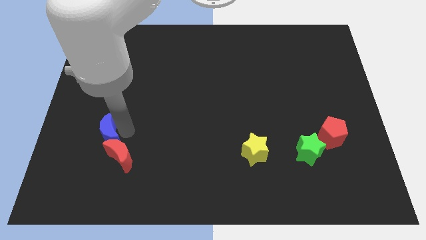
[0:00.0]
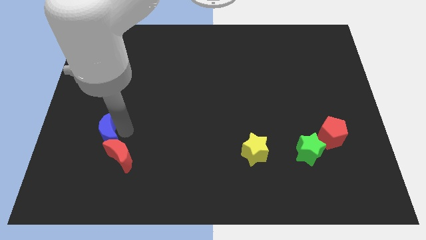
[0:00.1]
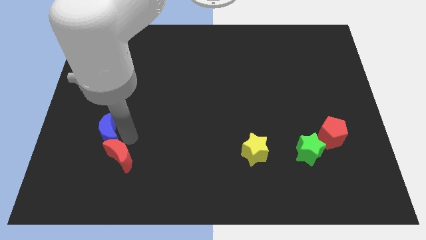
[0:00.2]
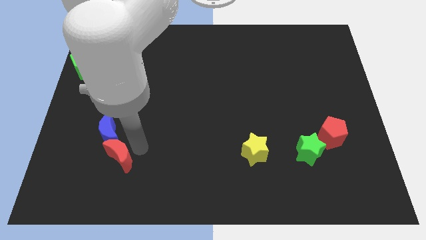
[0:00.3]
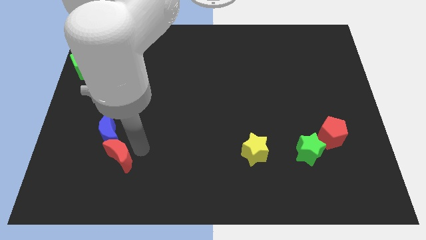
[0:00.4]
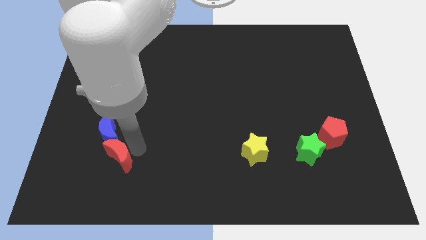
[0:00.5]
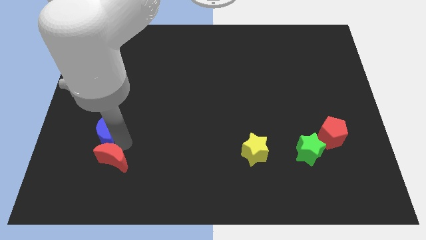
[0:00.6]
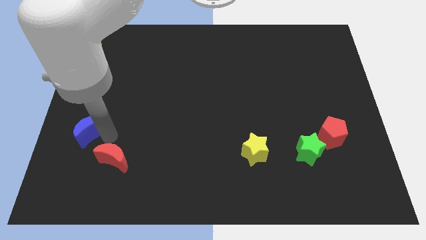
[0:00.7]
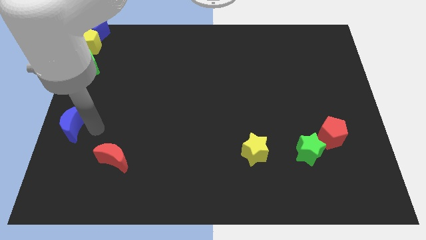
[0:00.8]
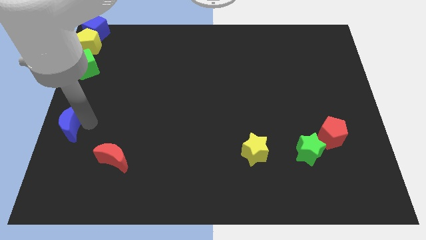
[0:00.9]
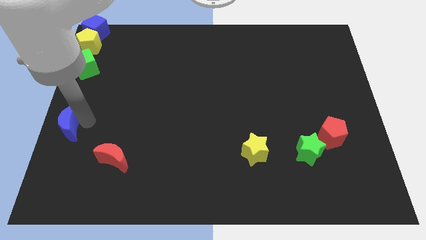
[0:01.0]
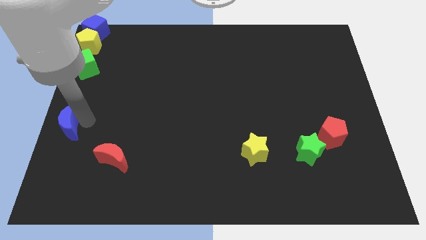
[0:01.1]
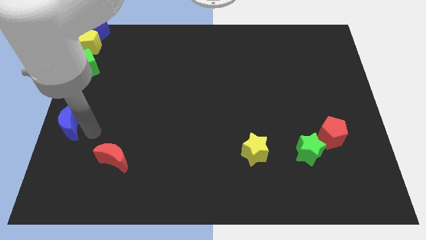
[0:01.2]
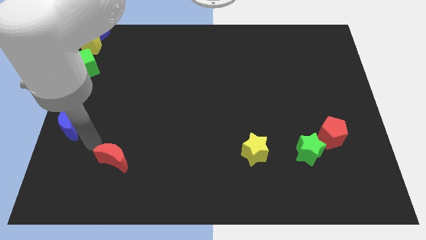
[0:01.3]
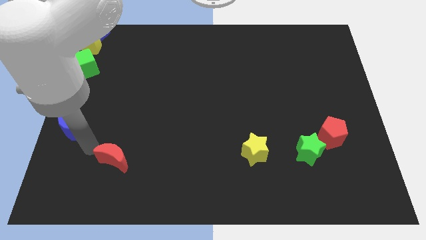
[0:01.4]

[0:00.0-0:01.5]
move the blue crescent away from the red crescent

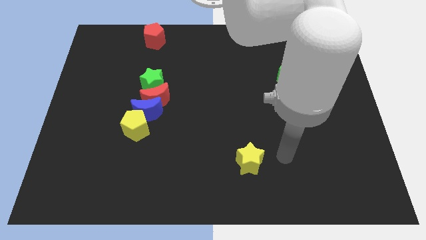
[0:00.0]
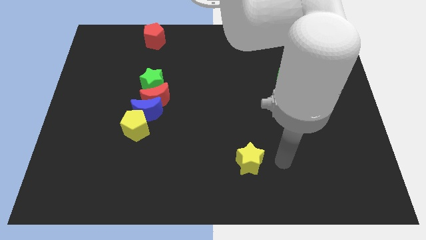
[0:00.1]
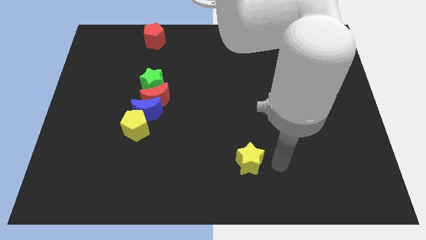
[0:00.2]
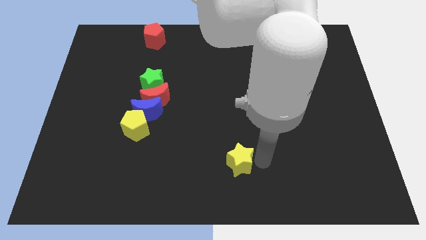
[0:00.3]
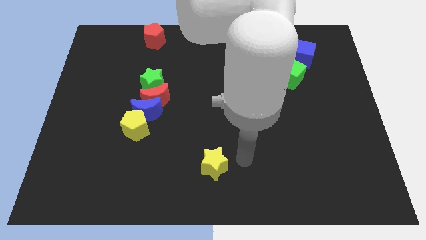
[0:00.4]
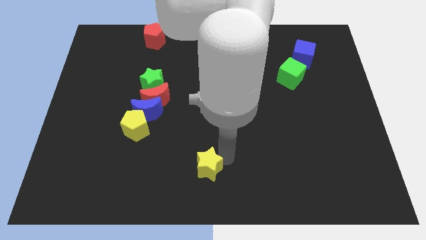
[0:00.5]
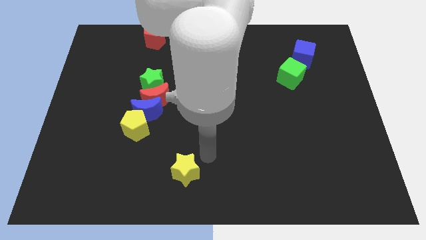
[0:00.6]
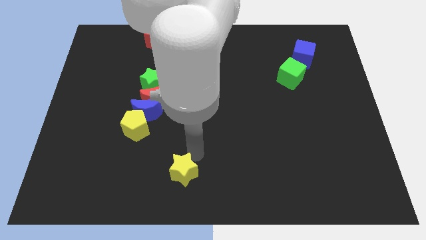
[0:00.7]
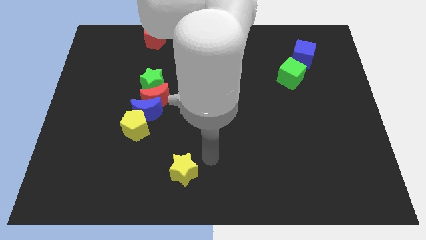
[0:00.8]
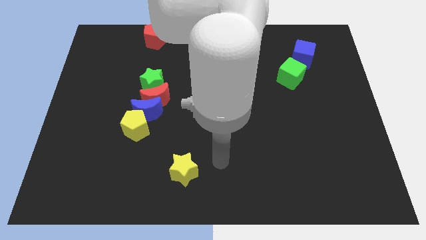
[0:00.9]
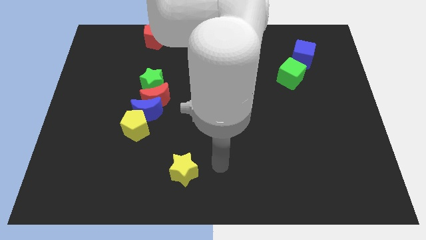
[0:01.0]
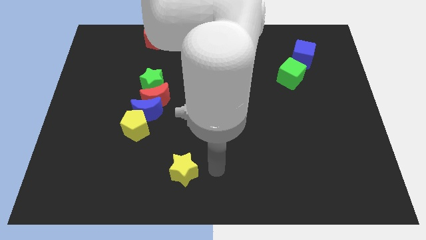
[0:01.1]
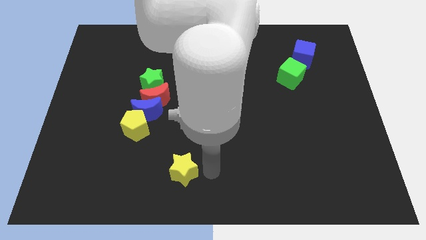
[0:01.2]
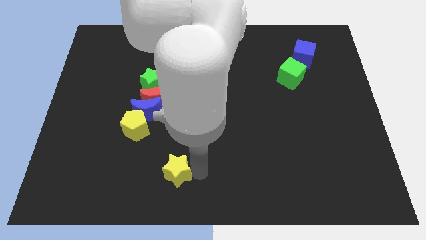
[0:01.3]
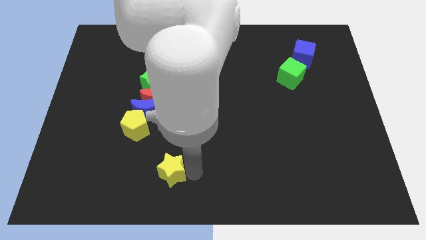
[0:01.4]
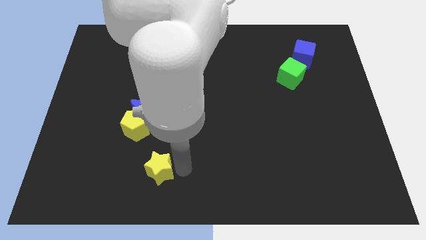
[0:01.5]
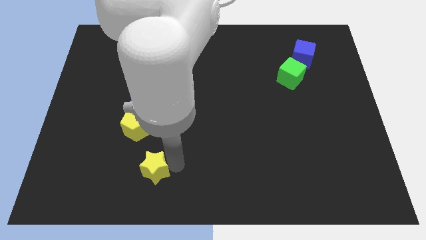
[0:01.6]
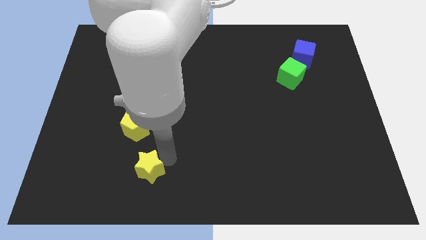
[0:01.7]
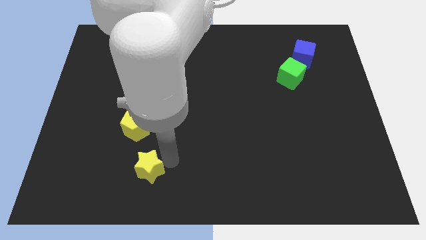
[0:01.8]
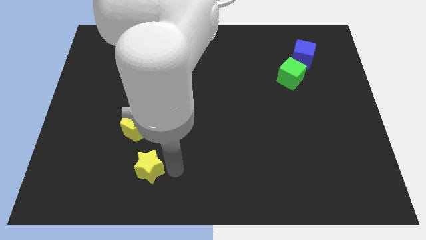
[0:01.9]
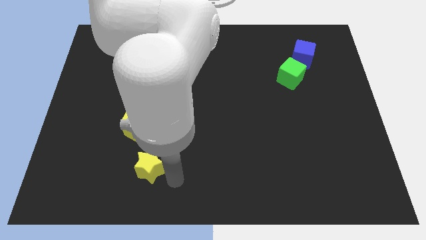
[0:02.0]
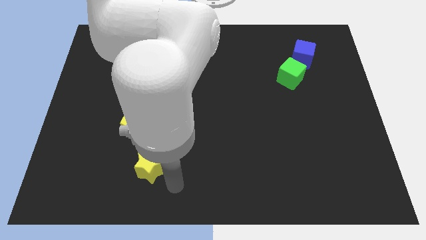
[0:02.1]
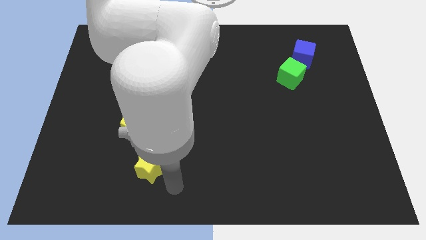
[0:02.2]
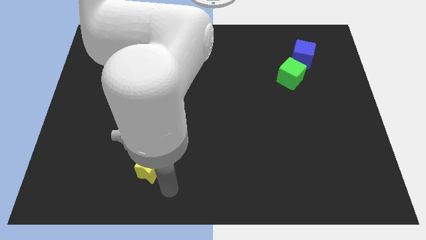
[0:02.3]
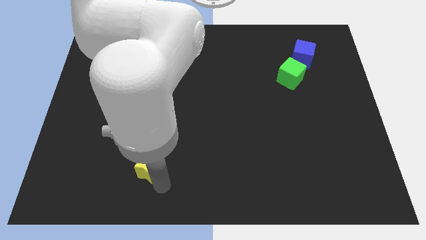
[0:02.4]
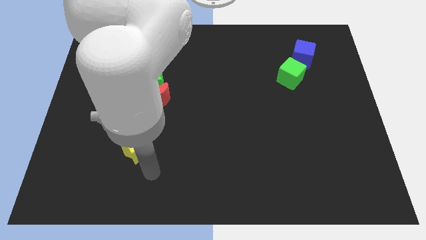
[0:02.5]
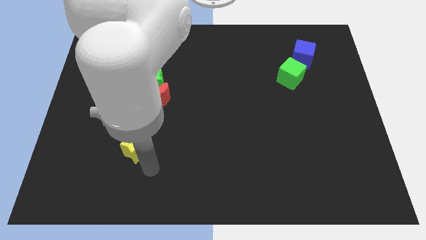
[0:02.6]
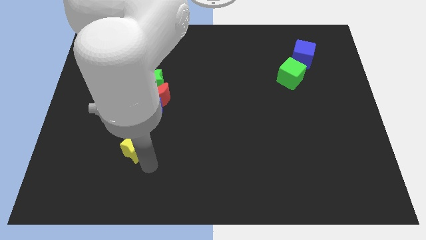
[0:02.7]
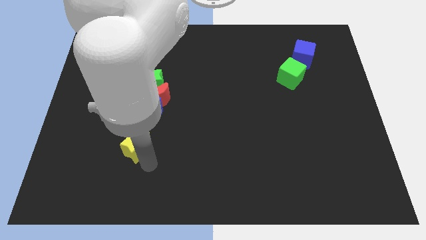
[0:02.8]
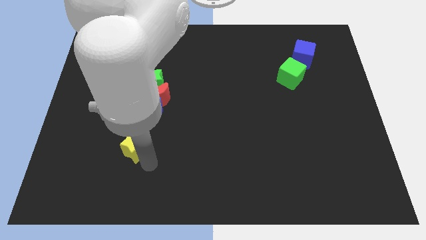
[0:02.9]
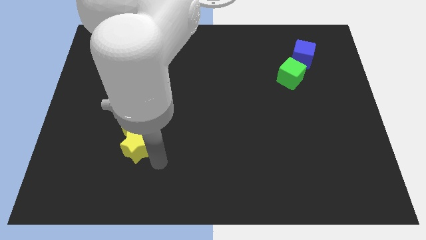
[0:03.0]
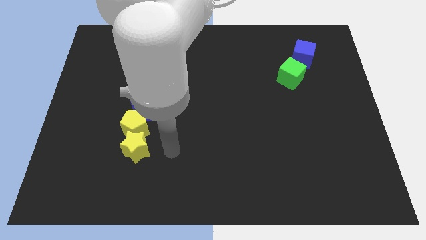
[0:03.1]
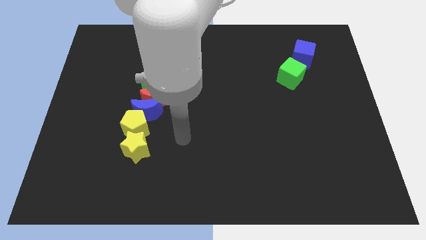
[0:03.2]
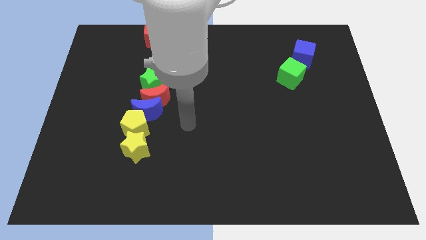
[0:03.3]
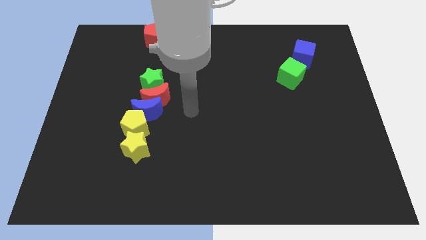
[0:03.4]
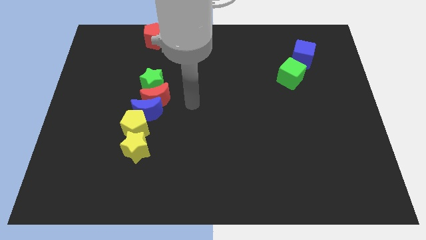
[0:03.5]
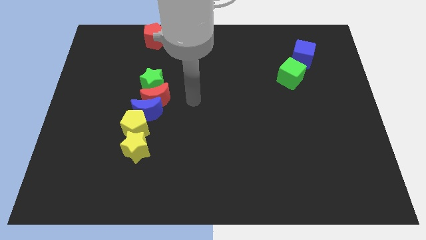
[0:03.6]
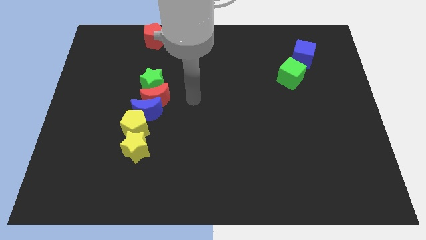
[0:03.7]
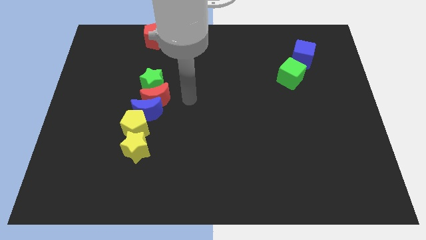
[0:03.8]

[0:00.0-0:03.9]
push the yellow star below the yellow pentagon

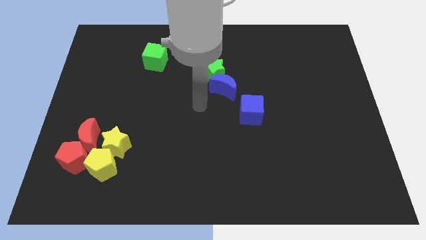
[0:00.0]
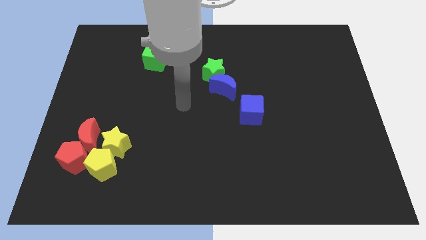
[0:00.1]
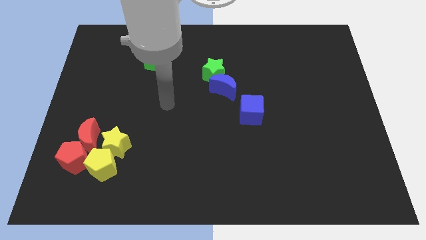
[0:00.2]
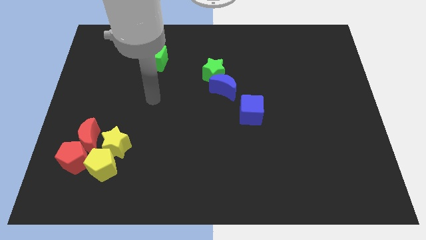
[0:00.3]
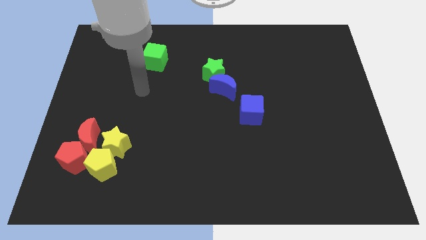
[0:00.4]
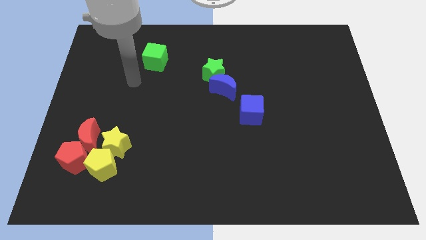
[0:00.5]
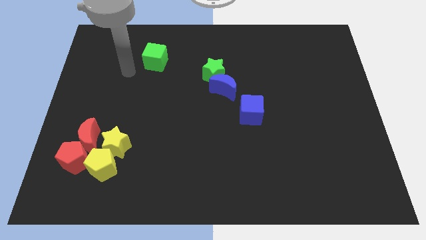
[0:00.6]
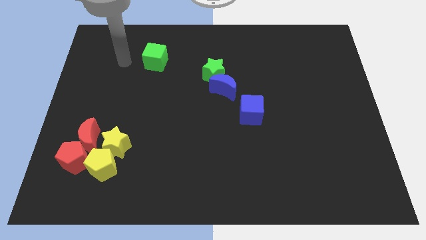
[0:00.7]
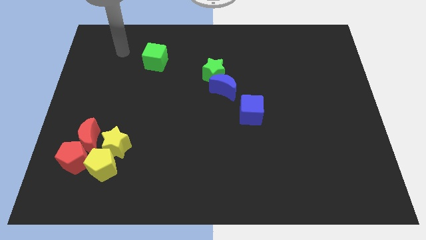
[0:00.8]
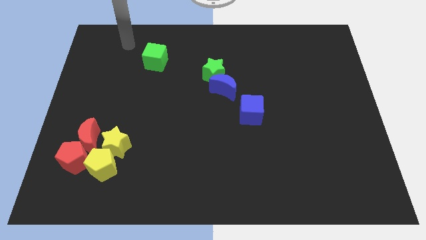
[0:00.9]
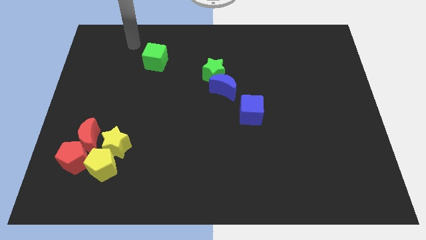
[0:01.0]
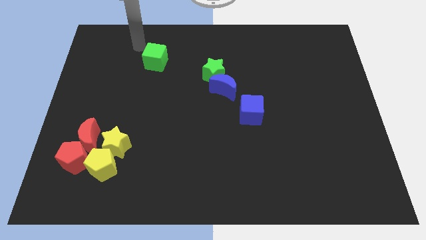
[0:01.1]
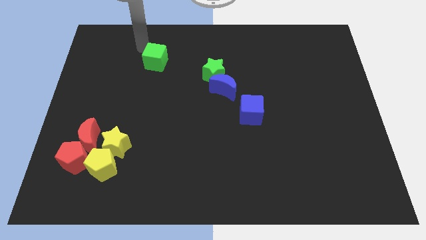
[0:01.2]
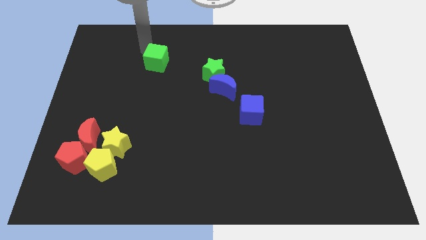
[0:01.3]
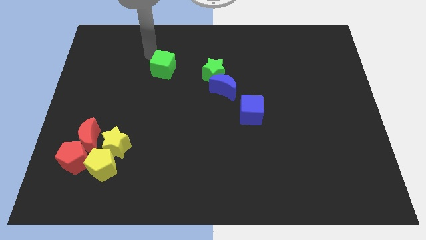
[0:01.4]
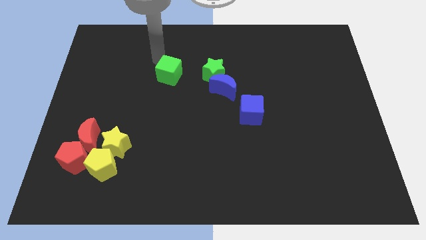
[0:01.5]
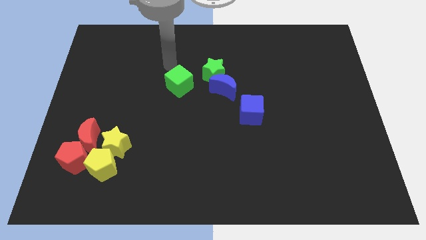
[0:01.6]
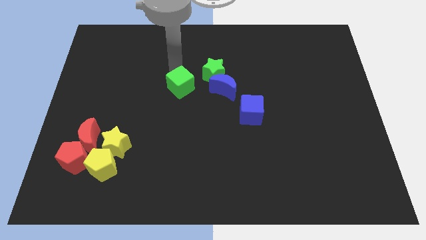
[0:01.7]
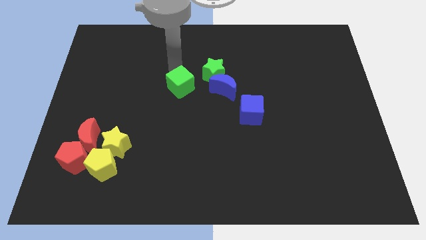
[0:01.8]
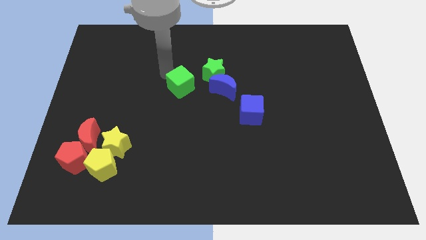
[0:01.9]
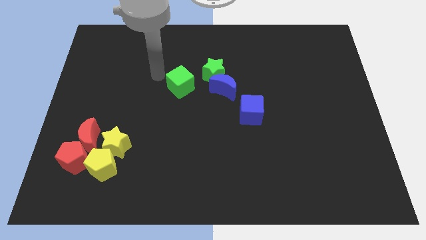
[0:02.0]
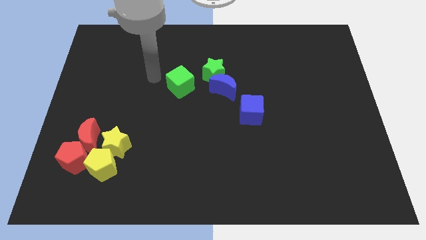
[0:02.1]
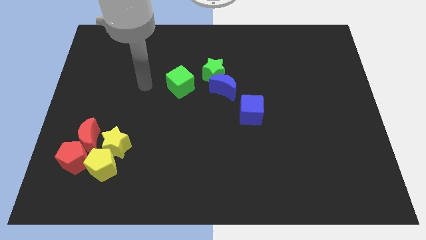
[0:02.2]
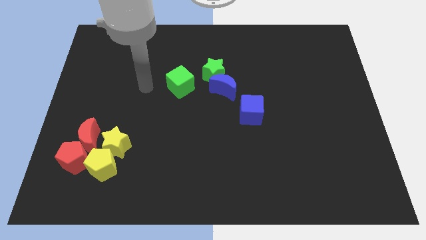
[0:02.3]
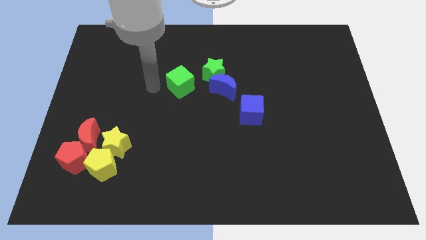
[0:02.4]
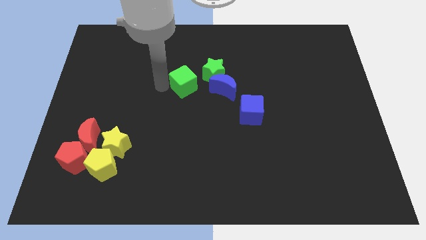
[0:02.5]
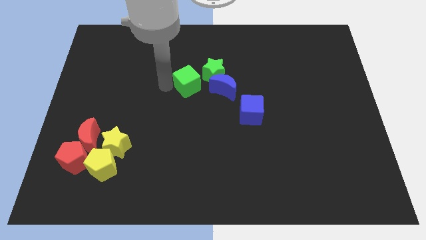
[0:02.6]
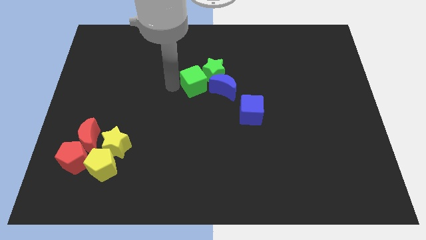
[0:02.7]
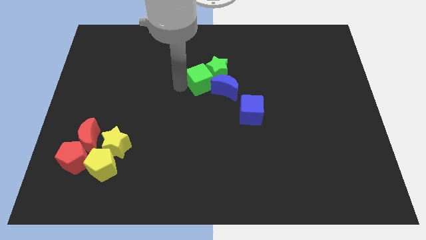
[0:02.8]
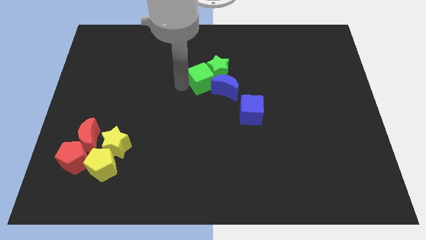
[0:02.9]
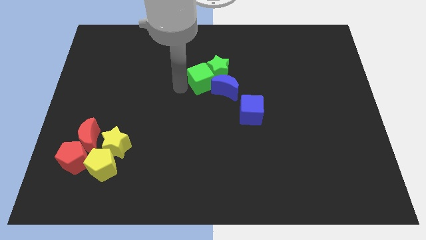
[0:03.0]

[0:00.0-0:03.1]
add green cube into green star

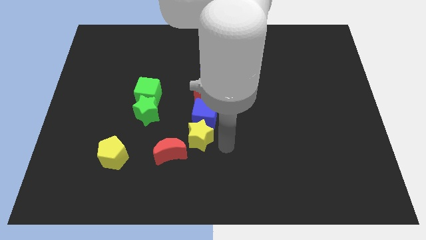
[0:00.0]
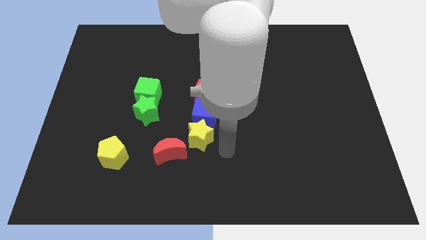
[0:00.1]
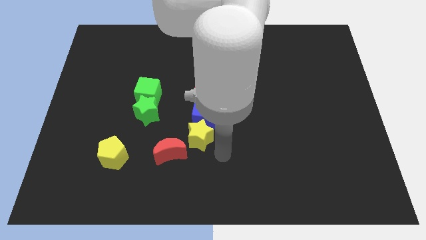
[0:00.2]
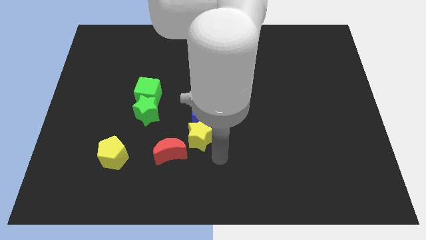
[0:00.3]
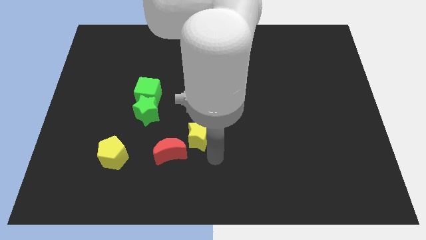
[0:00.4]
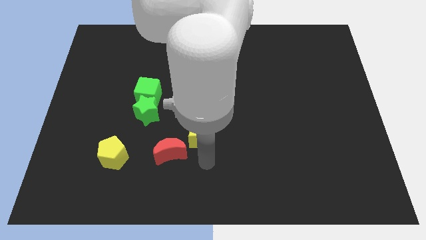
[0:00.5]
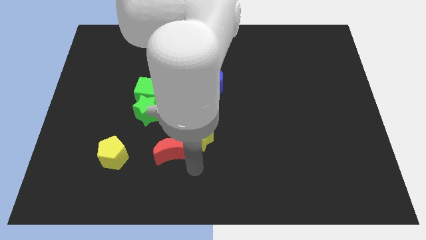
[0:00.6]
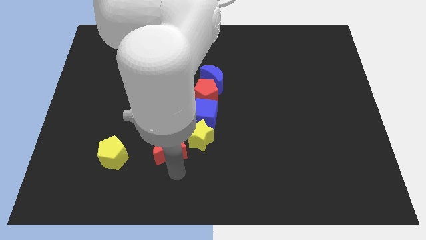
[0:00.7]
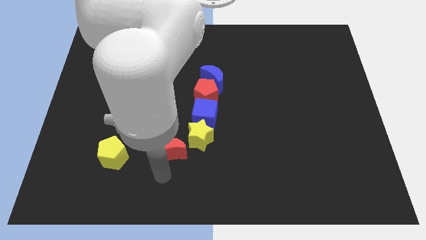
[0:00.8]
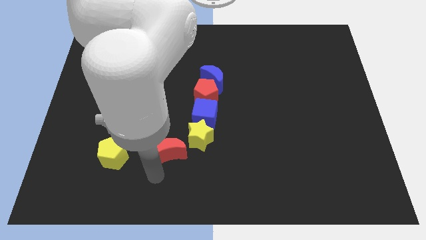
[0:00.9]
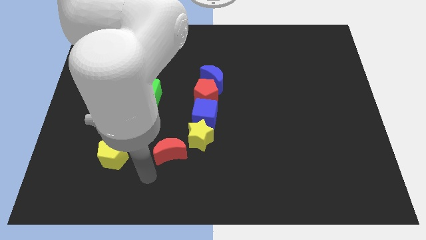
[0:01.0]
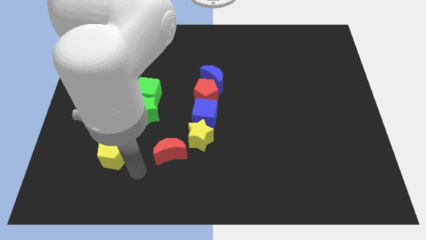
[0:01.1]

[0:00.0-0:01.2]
move your arm to the right of the yellow pentagon
